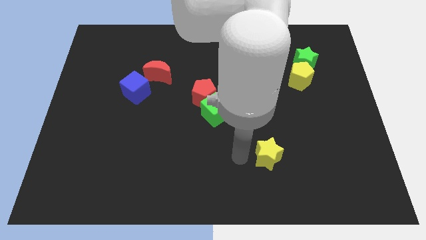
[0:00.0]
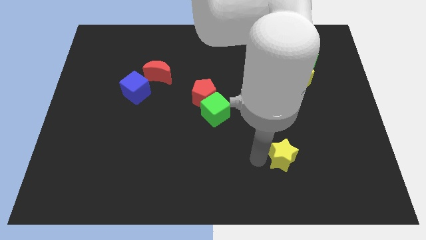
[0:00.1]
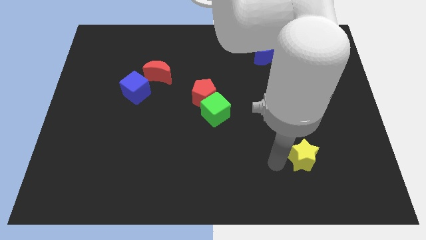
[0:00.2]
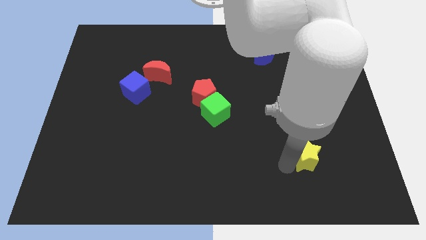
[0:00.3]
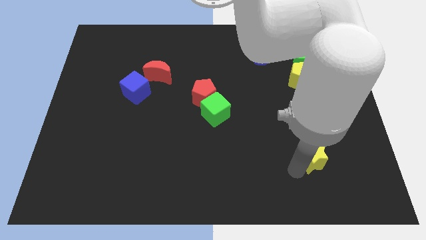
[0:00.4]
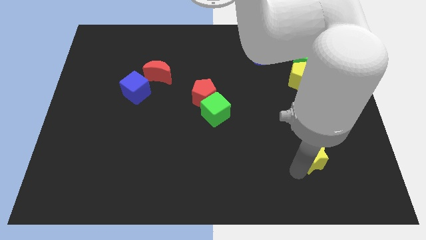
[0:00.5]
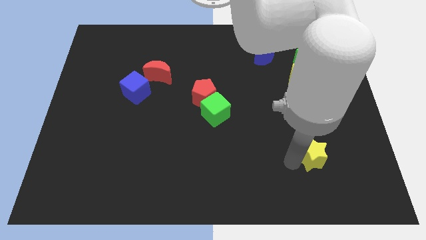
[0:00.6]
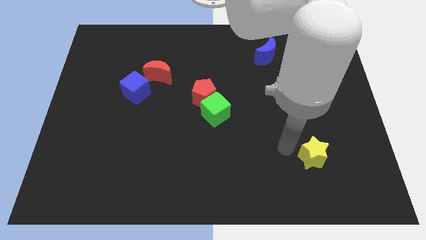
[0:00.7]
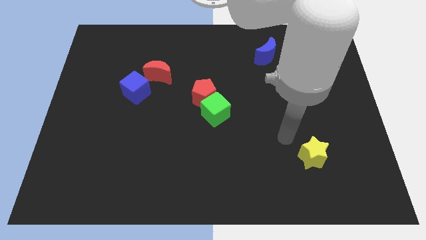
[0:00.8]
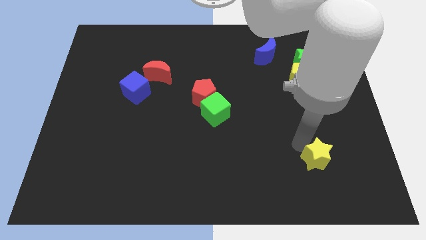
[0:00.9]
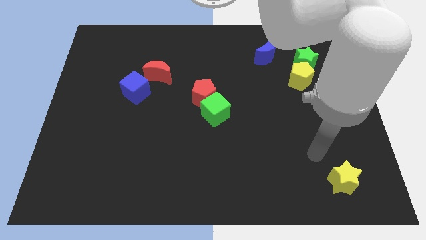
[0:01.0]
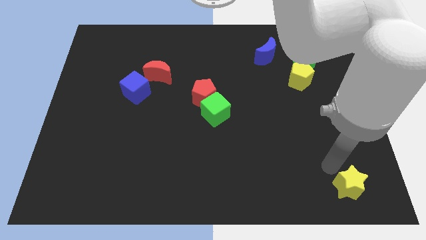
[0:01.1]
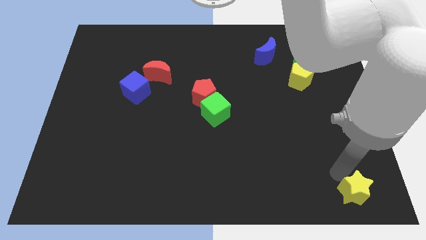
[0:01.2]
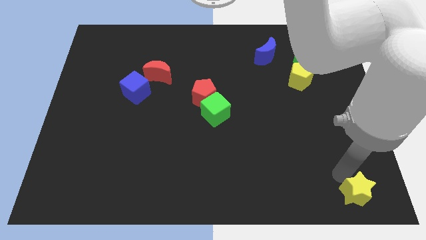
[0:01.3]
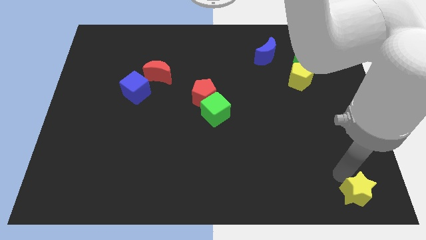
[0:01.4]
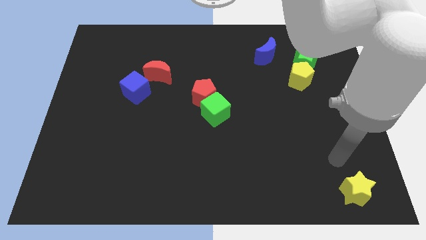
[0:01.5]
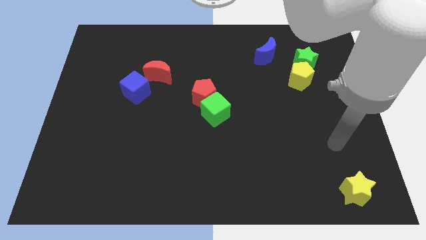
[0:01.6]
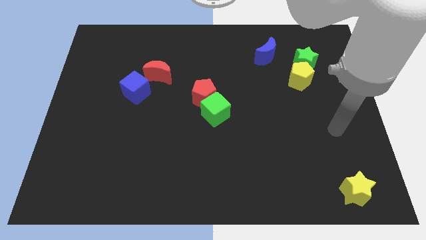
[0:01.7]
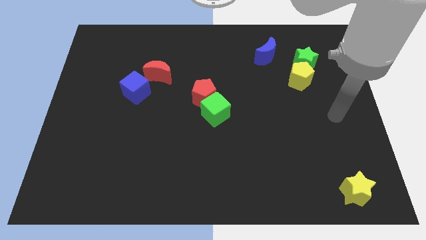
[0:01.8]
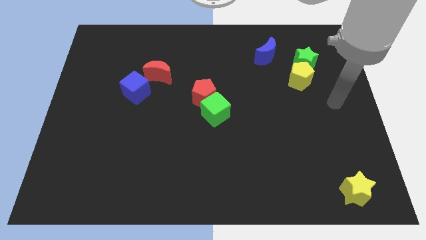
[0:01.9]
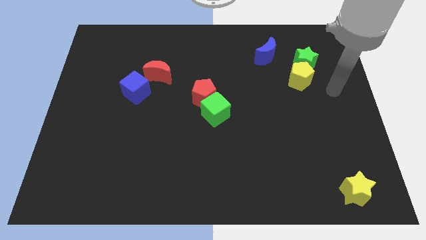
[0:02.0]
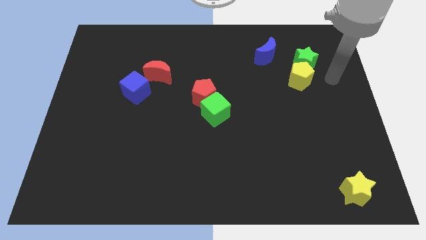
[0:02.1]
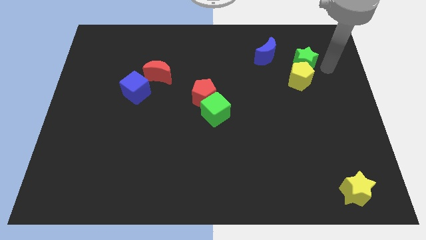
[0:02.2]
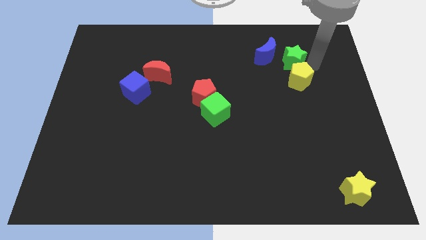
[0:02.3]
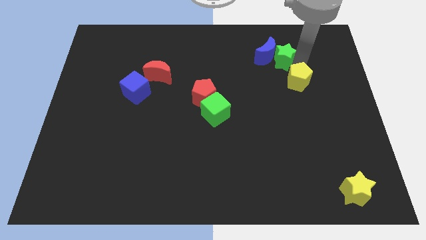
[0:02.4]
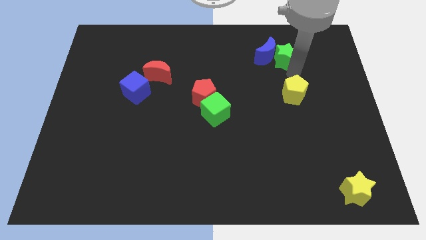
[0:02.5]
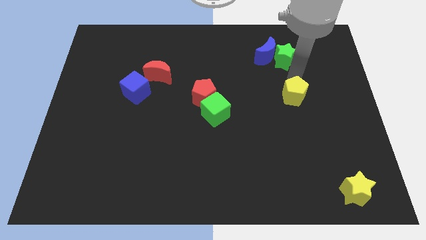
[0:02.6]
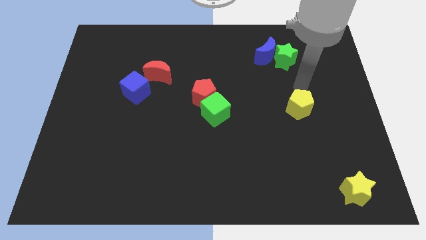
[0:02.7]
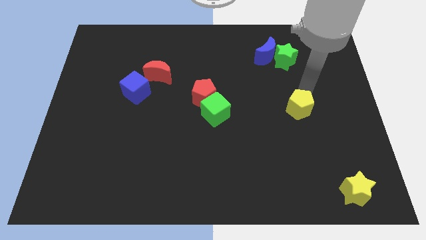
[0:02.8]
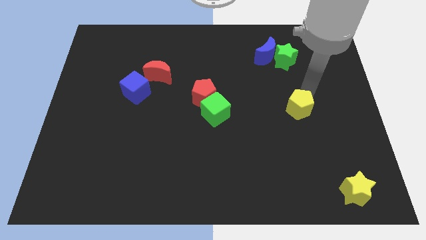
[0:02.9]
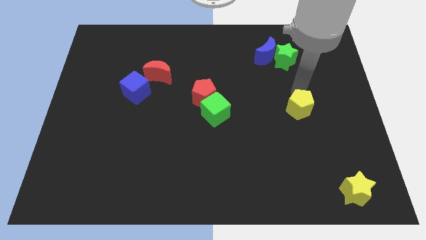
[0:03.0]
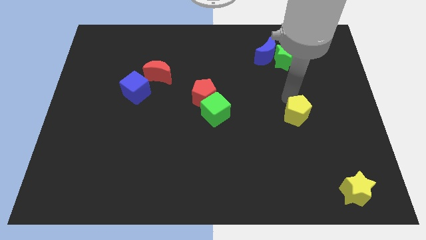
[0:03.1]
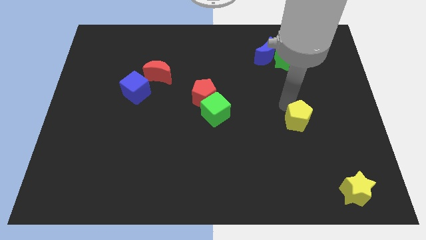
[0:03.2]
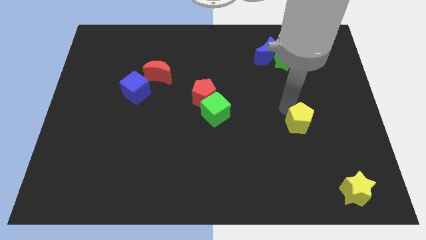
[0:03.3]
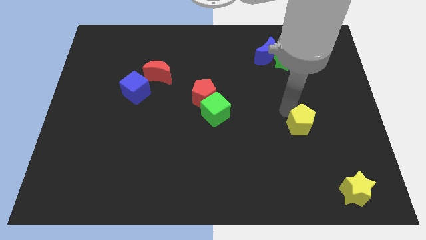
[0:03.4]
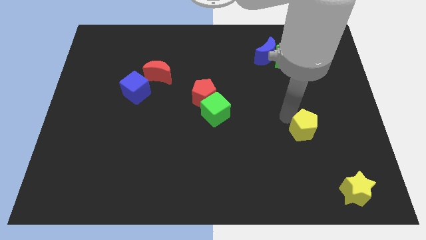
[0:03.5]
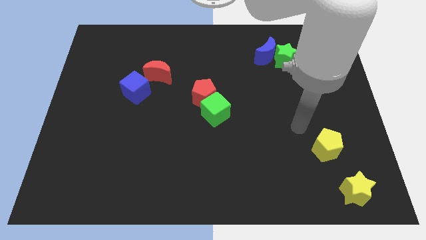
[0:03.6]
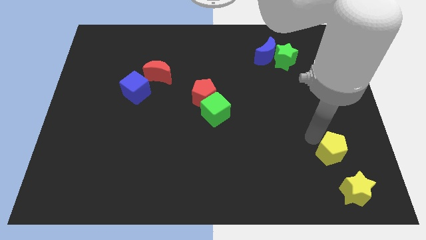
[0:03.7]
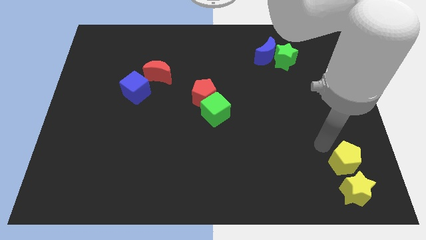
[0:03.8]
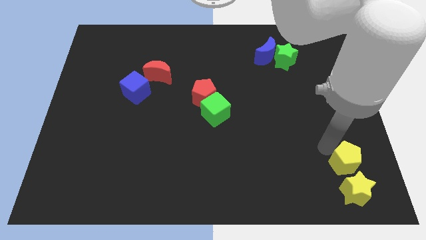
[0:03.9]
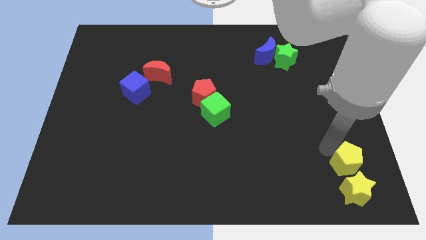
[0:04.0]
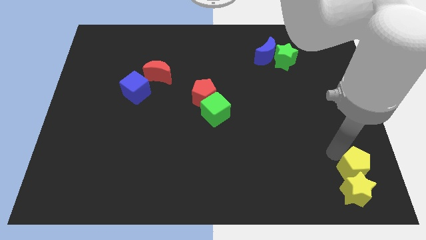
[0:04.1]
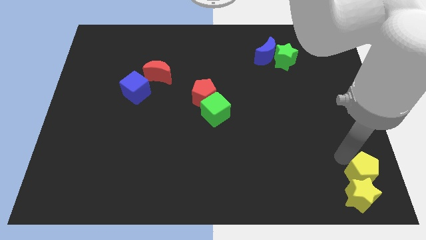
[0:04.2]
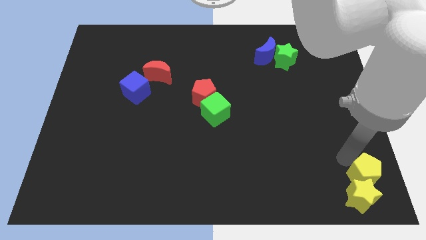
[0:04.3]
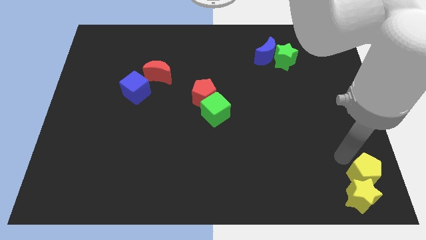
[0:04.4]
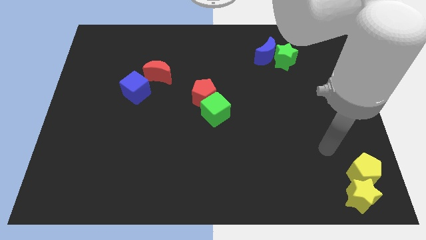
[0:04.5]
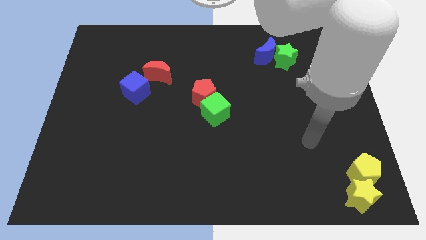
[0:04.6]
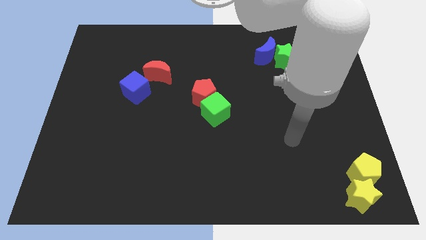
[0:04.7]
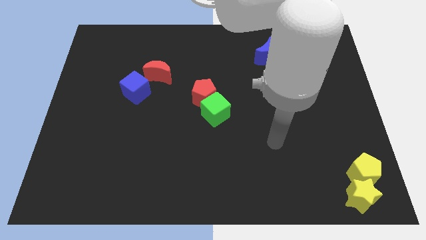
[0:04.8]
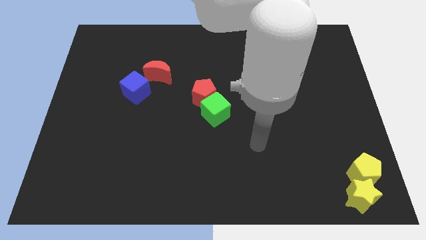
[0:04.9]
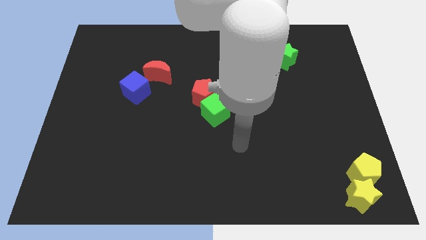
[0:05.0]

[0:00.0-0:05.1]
move the yellow blocks to the bottom right

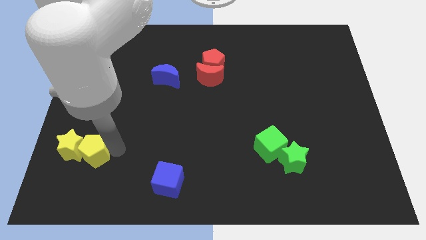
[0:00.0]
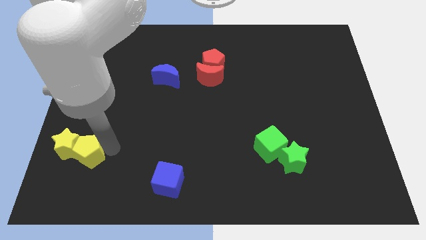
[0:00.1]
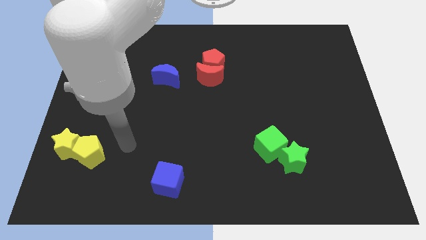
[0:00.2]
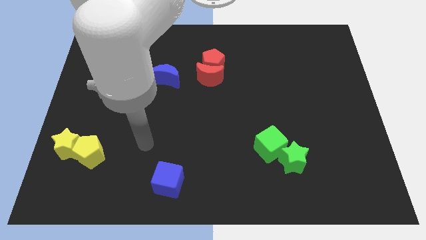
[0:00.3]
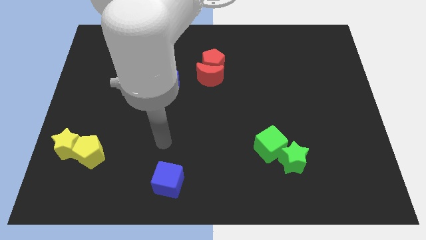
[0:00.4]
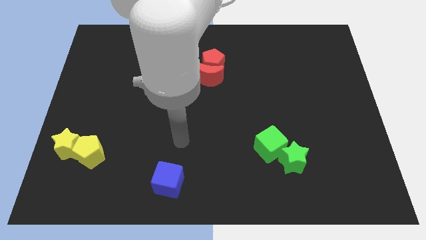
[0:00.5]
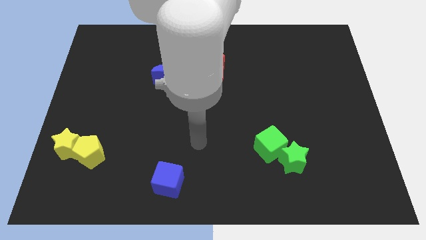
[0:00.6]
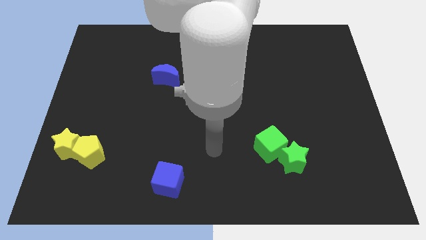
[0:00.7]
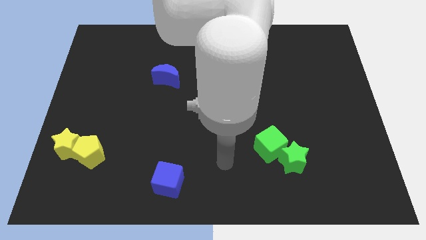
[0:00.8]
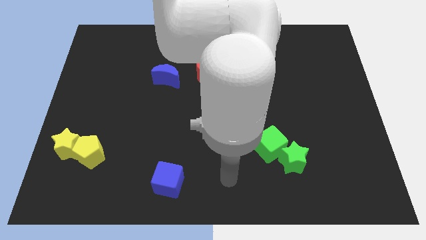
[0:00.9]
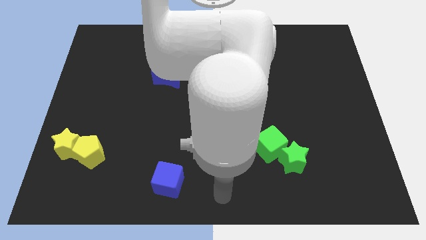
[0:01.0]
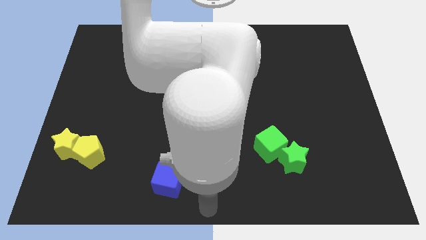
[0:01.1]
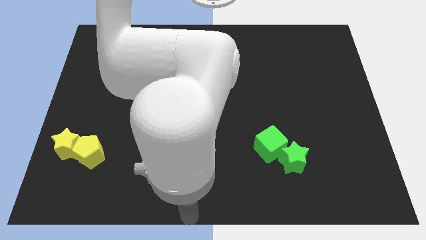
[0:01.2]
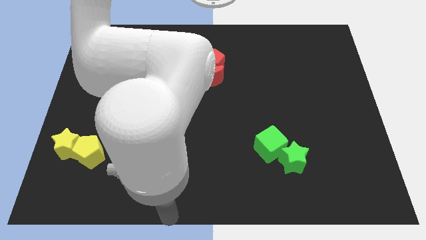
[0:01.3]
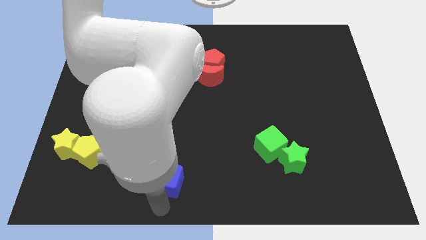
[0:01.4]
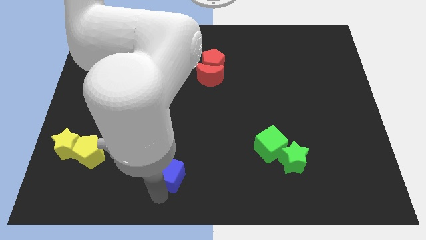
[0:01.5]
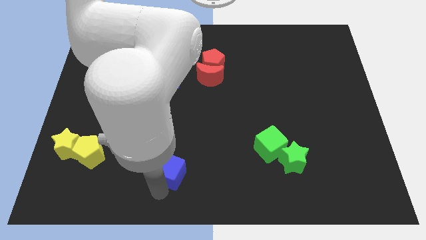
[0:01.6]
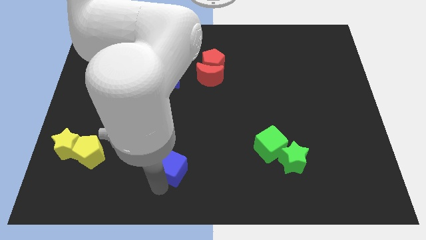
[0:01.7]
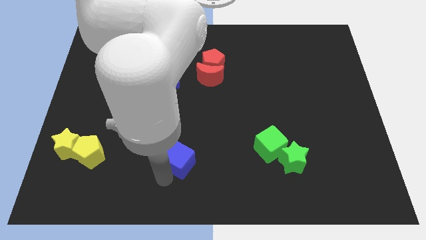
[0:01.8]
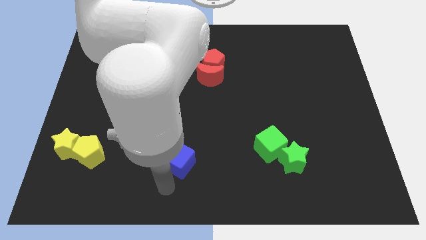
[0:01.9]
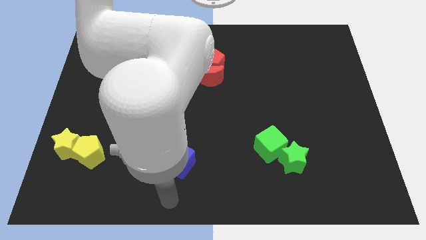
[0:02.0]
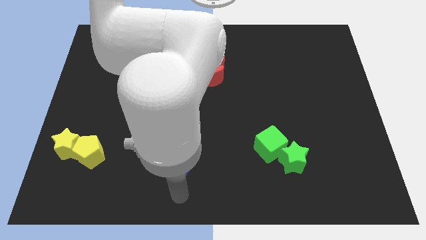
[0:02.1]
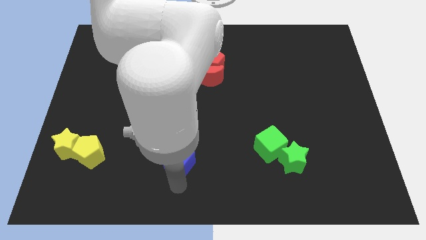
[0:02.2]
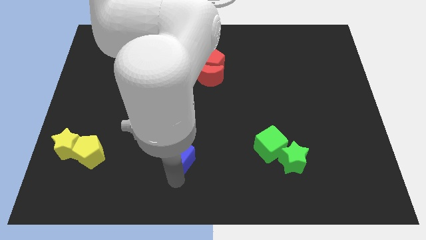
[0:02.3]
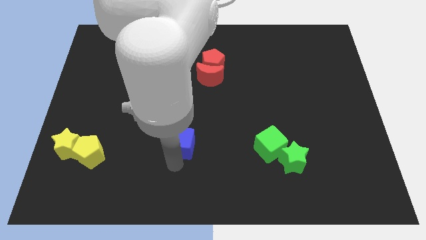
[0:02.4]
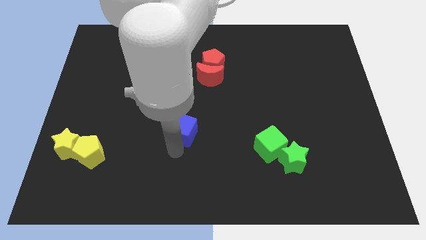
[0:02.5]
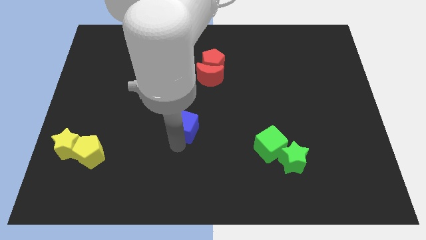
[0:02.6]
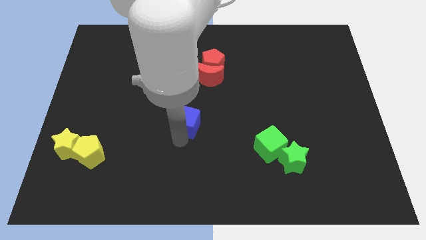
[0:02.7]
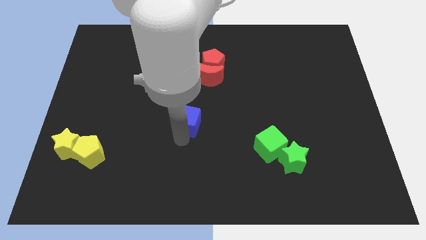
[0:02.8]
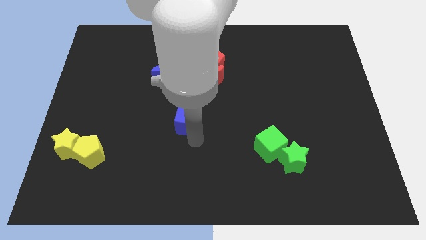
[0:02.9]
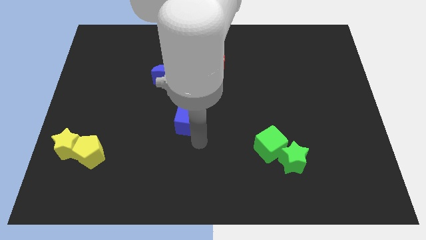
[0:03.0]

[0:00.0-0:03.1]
place the blue cube left diagonally to green cube

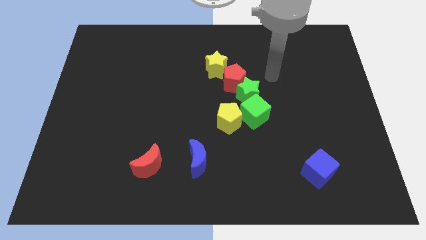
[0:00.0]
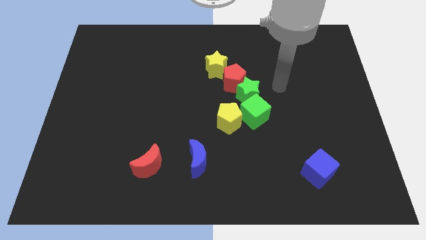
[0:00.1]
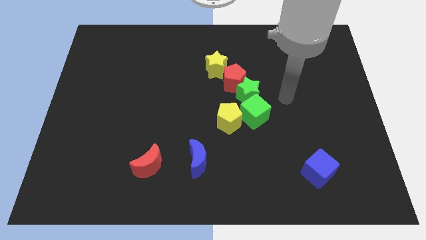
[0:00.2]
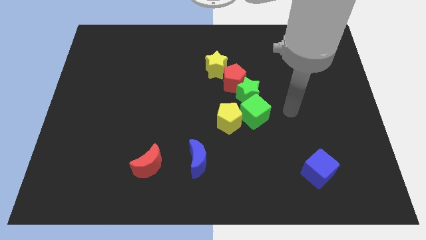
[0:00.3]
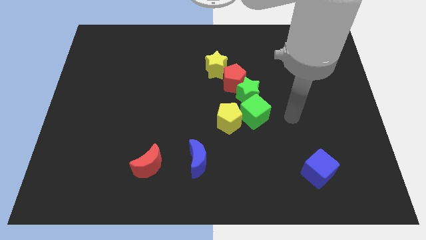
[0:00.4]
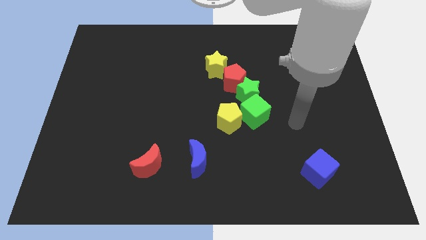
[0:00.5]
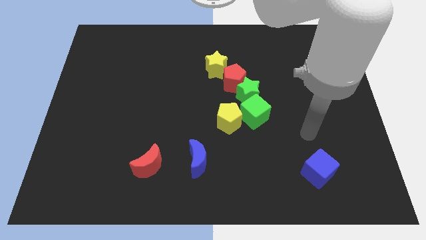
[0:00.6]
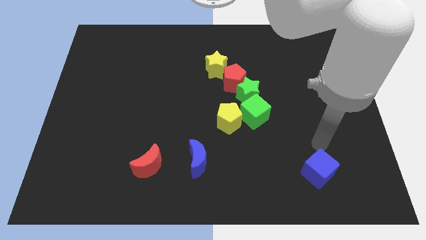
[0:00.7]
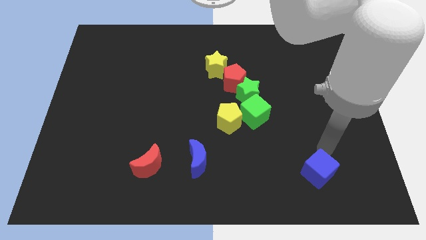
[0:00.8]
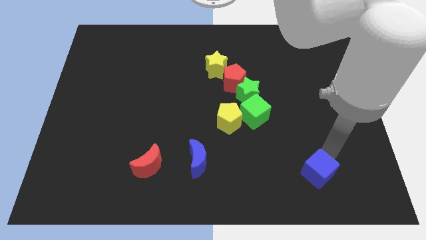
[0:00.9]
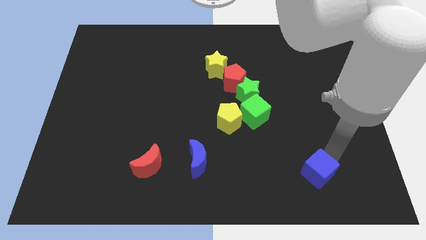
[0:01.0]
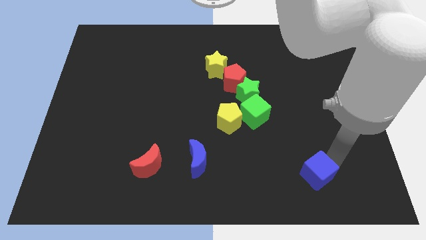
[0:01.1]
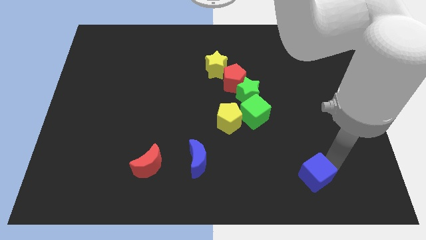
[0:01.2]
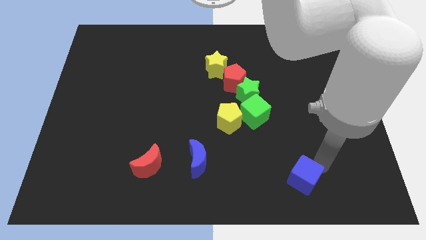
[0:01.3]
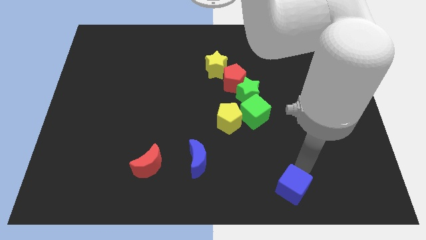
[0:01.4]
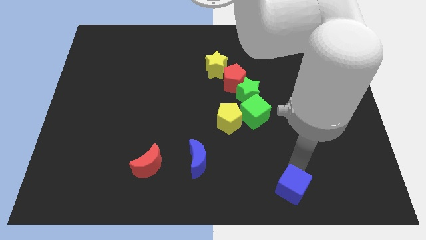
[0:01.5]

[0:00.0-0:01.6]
push the blue cube slightly to the bottom side of the board
